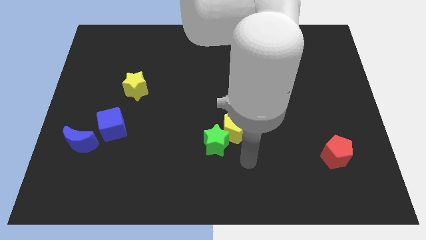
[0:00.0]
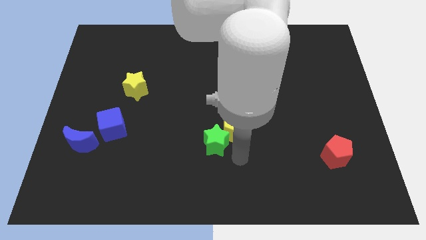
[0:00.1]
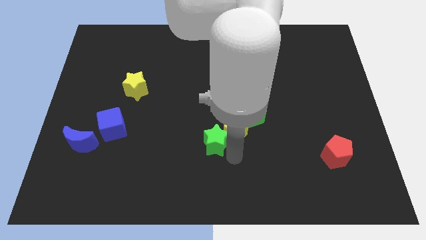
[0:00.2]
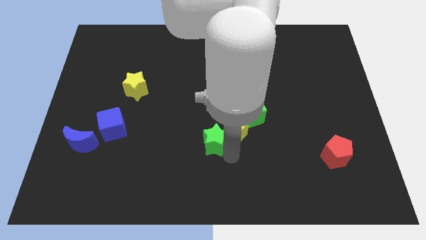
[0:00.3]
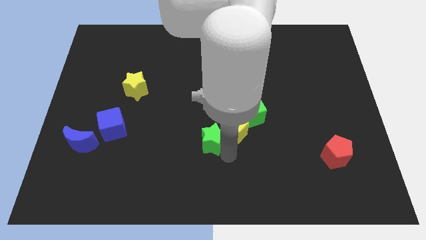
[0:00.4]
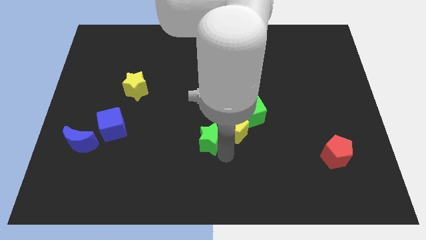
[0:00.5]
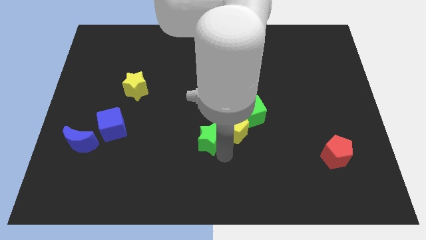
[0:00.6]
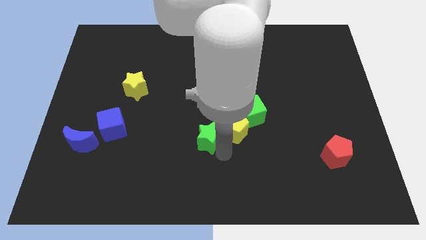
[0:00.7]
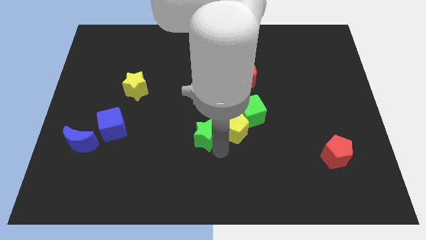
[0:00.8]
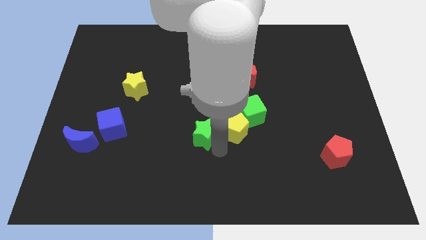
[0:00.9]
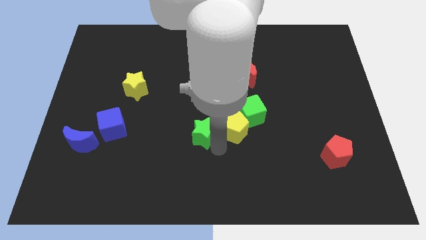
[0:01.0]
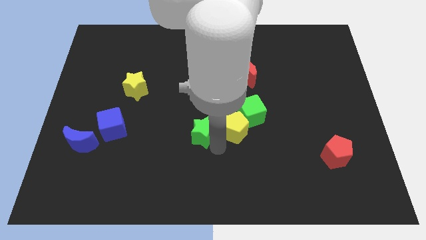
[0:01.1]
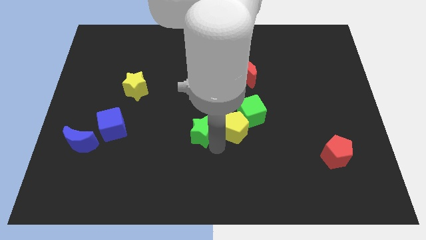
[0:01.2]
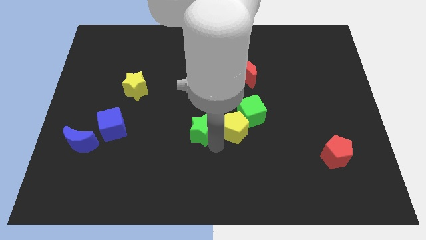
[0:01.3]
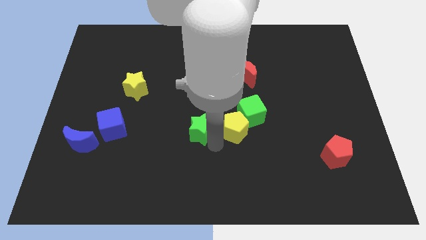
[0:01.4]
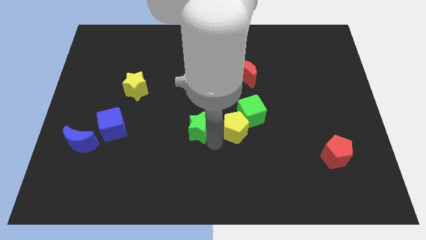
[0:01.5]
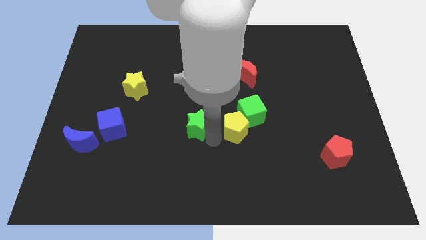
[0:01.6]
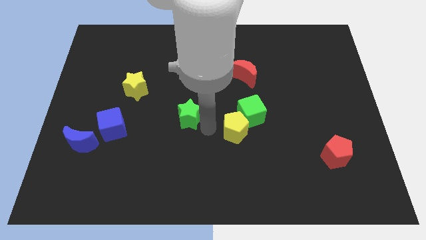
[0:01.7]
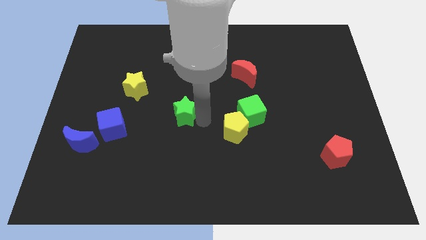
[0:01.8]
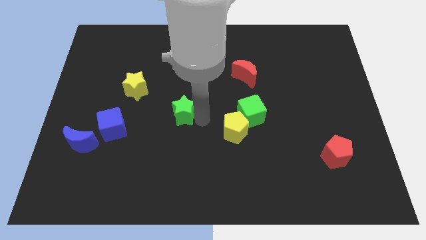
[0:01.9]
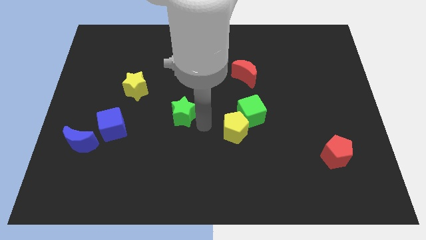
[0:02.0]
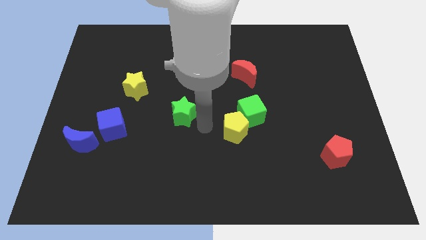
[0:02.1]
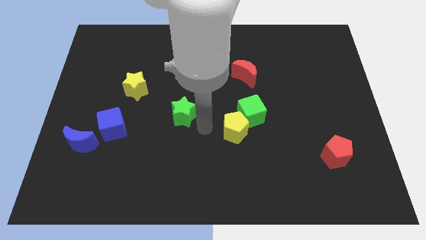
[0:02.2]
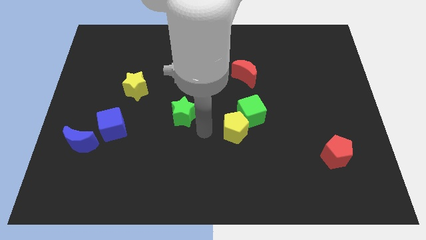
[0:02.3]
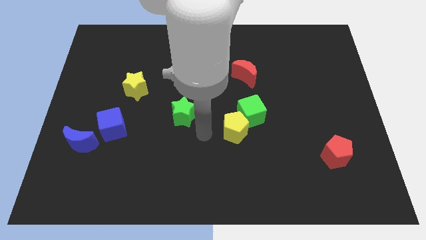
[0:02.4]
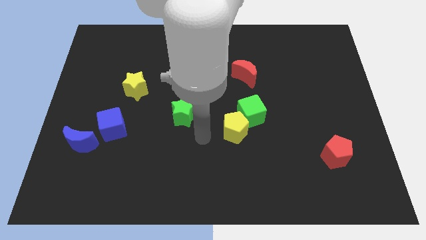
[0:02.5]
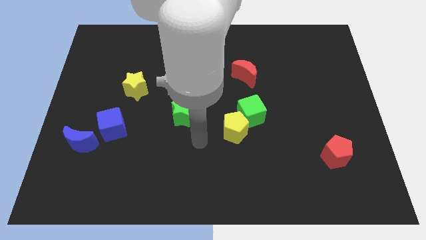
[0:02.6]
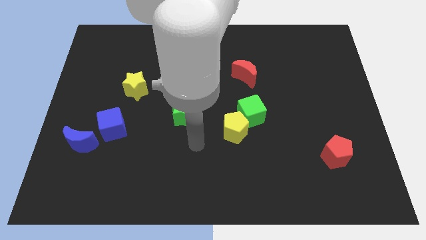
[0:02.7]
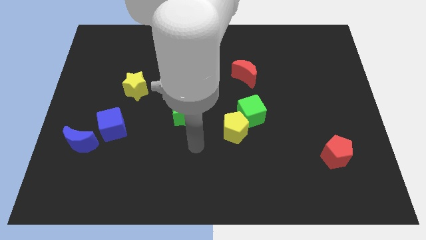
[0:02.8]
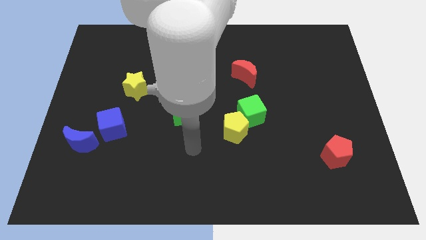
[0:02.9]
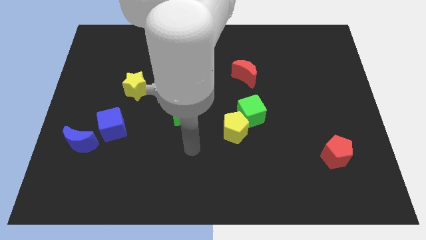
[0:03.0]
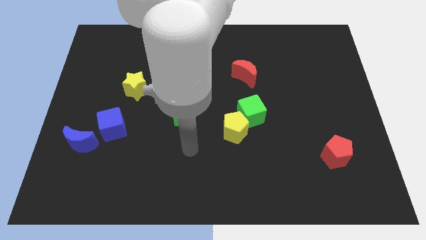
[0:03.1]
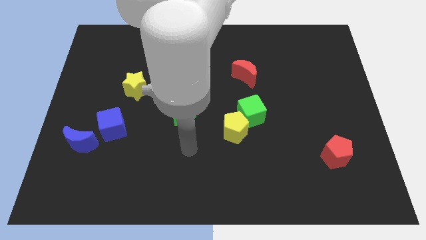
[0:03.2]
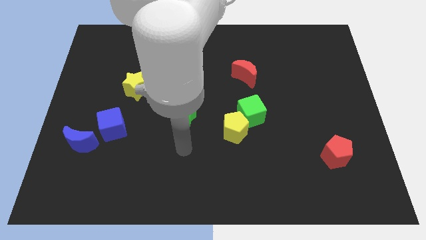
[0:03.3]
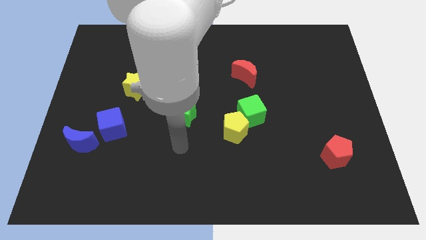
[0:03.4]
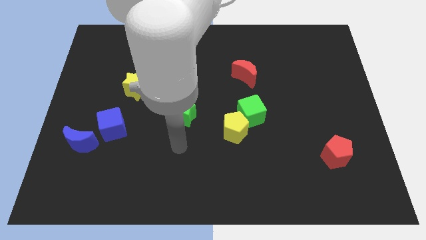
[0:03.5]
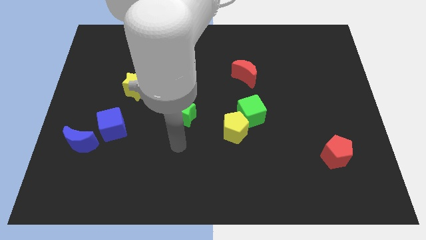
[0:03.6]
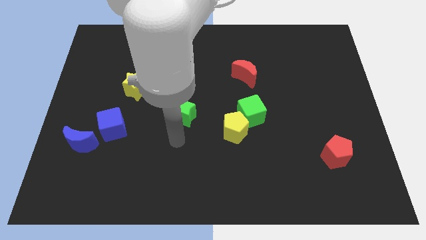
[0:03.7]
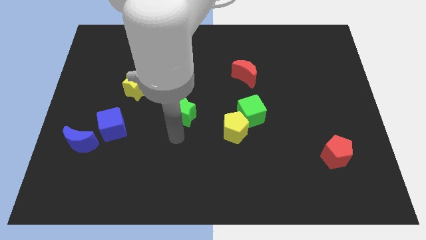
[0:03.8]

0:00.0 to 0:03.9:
separate the green star from the yellow pentagon

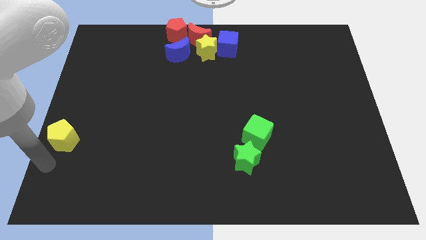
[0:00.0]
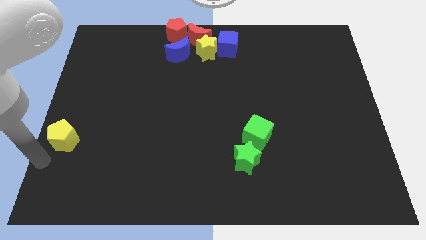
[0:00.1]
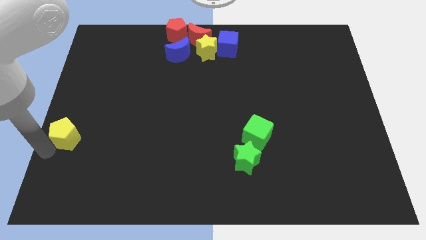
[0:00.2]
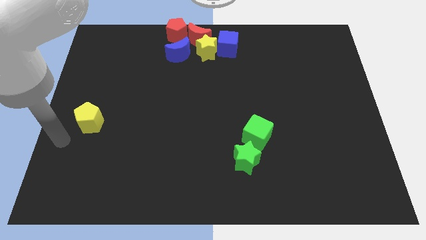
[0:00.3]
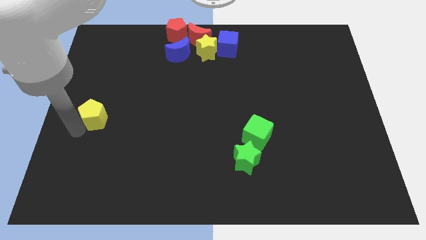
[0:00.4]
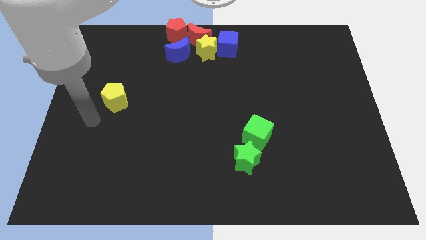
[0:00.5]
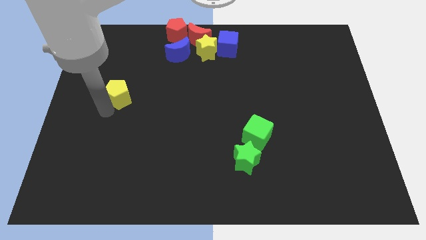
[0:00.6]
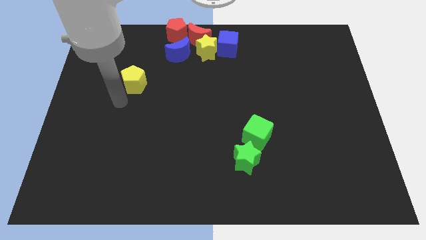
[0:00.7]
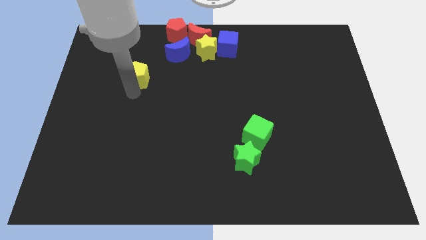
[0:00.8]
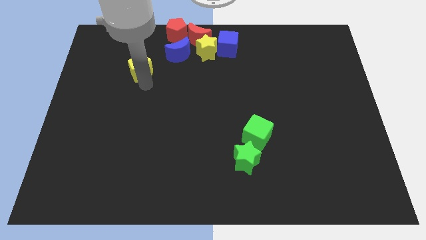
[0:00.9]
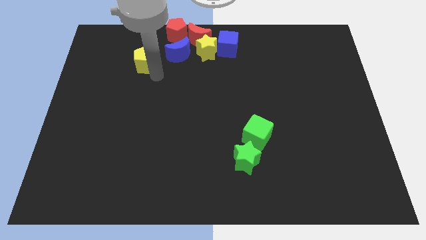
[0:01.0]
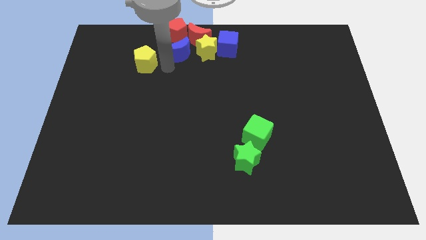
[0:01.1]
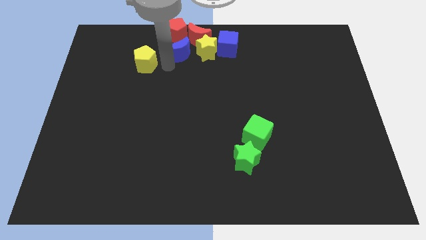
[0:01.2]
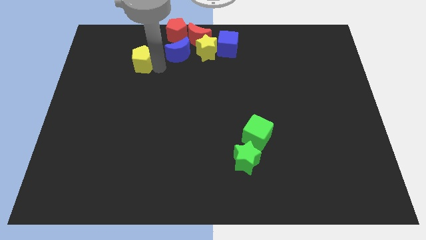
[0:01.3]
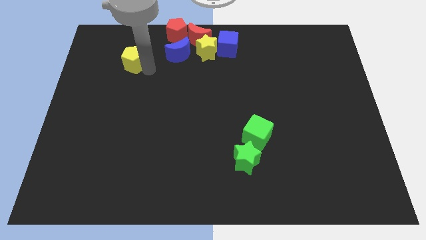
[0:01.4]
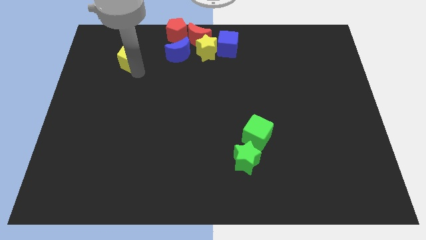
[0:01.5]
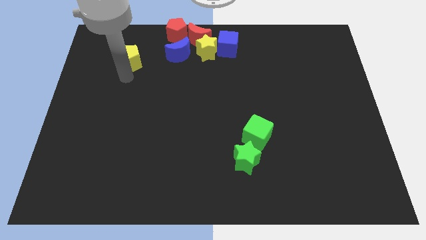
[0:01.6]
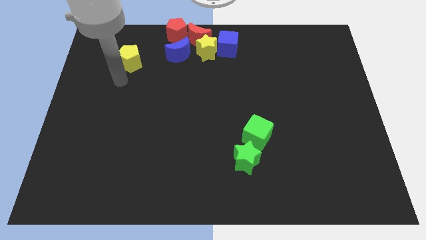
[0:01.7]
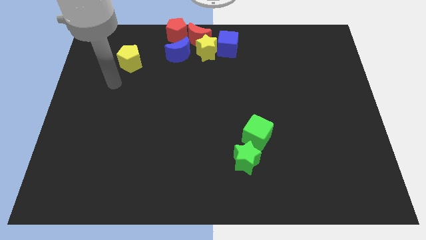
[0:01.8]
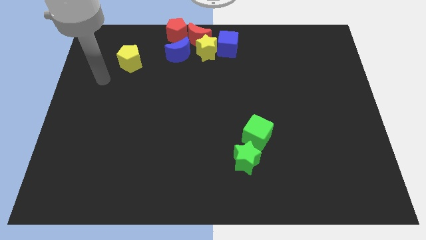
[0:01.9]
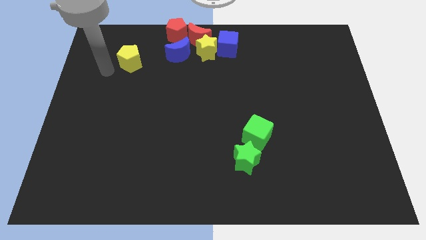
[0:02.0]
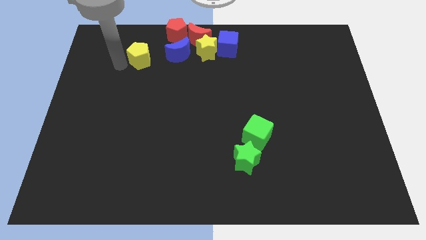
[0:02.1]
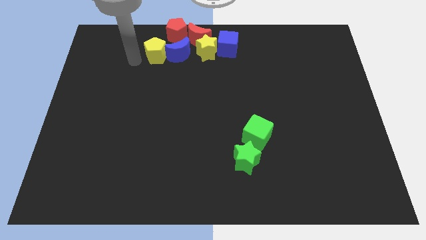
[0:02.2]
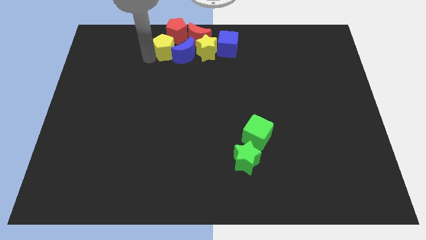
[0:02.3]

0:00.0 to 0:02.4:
push the yellow pentagon into the blue crescent

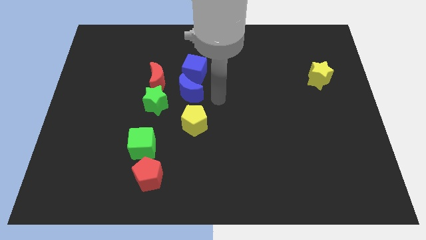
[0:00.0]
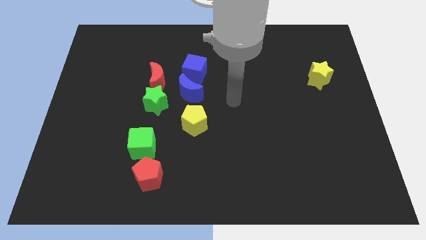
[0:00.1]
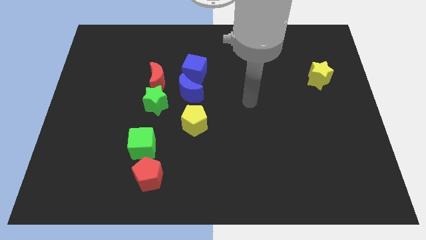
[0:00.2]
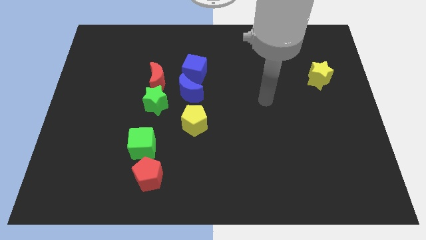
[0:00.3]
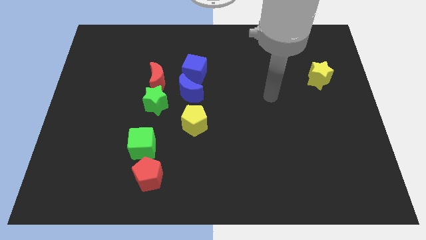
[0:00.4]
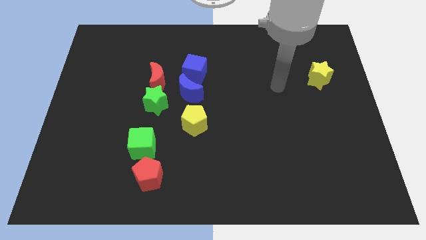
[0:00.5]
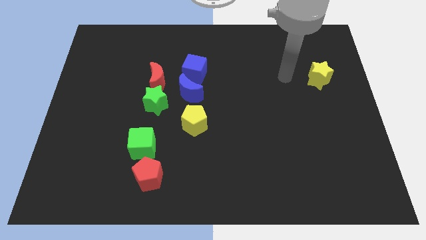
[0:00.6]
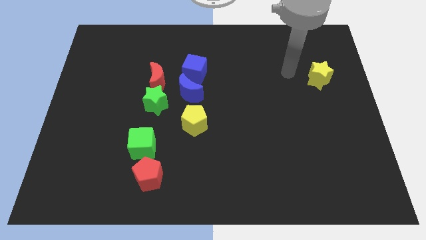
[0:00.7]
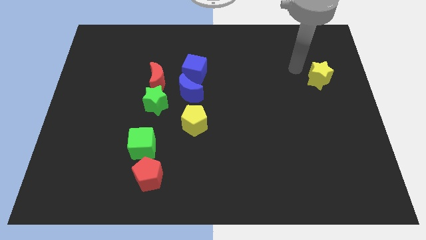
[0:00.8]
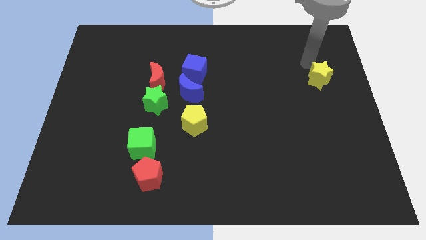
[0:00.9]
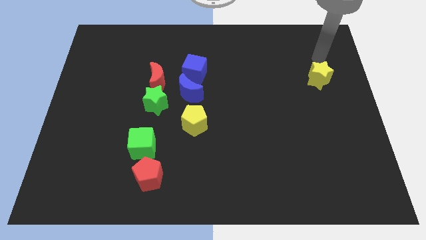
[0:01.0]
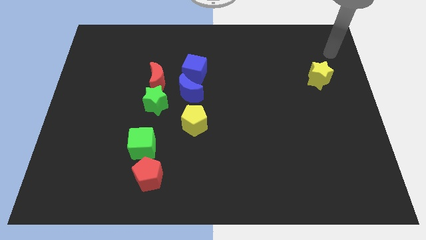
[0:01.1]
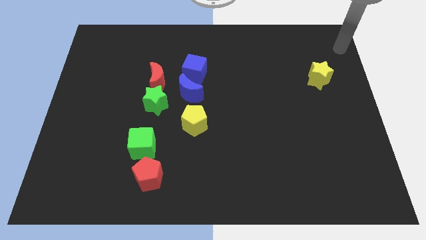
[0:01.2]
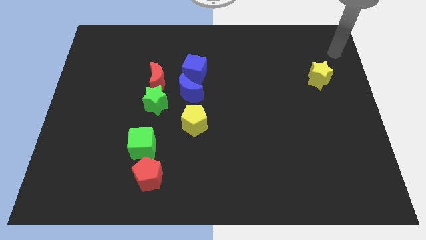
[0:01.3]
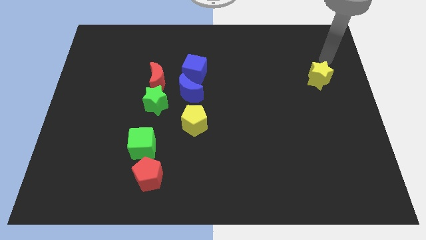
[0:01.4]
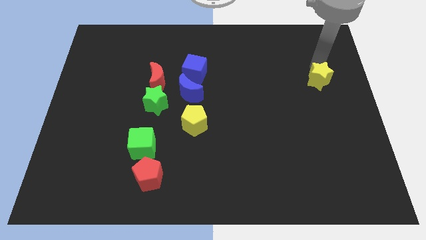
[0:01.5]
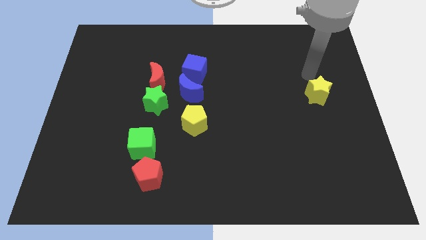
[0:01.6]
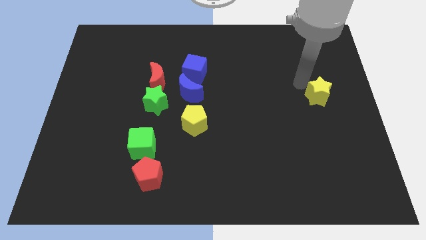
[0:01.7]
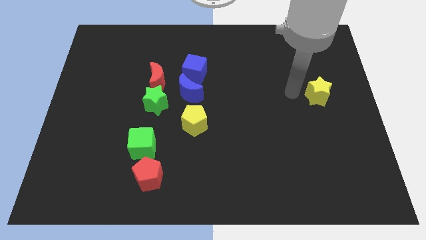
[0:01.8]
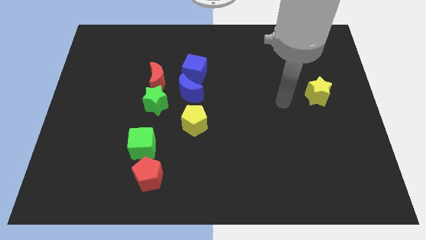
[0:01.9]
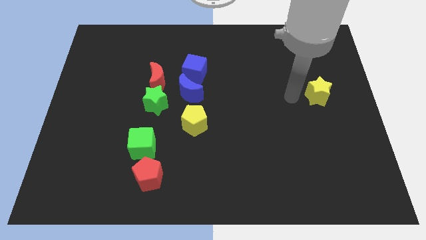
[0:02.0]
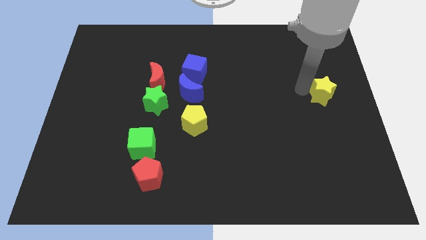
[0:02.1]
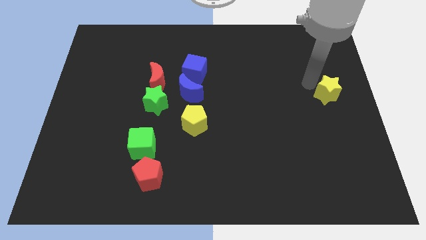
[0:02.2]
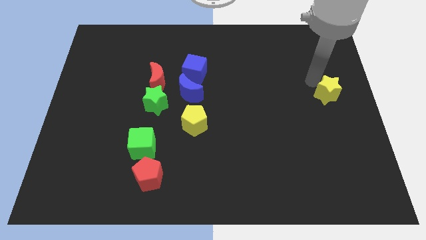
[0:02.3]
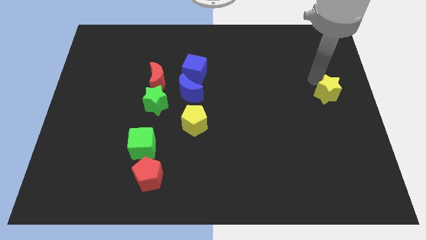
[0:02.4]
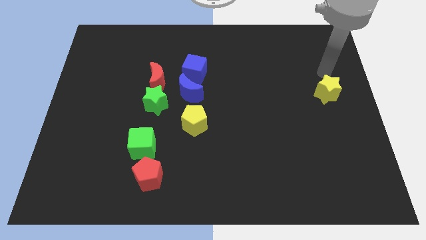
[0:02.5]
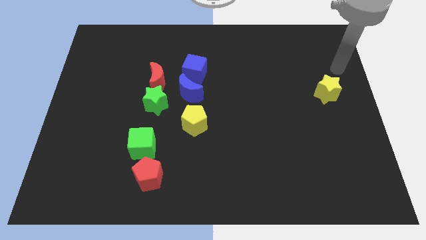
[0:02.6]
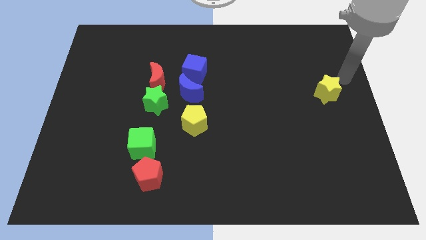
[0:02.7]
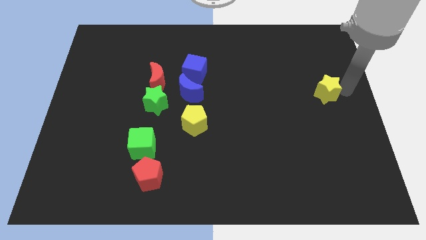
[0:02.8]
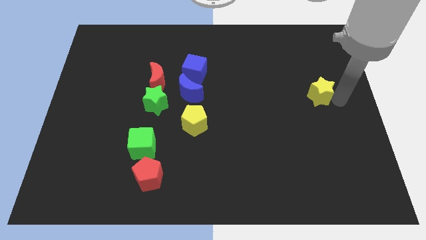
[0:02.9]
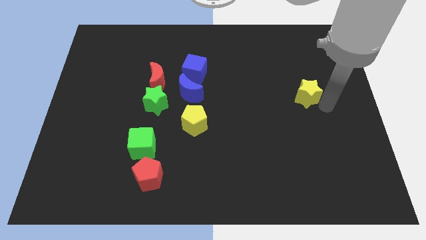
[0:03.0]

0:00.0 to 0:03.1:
moev the yellow star towards yellow pentagon
